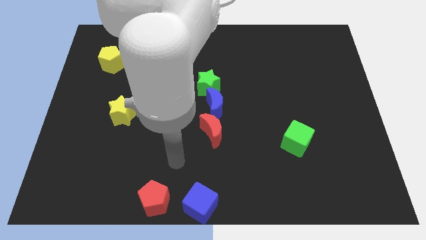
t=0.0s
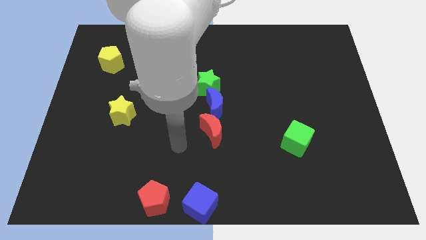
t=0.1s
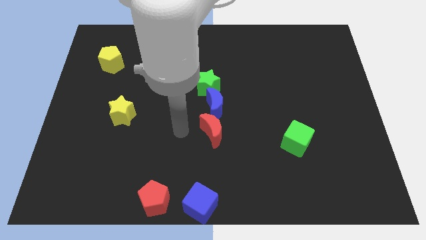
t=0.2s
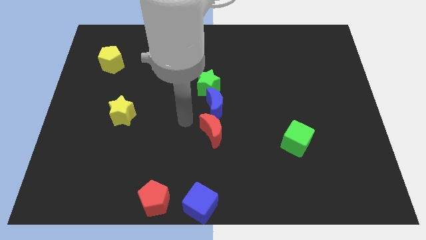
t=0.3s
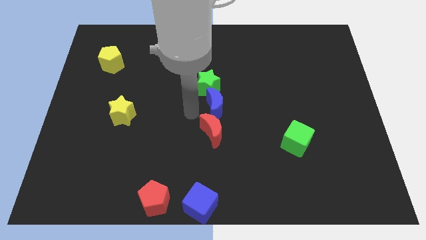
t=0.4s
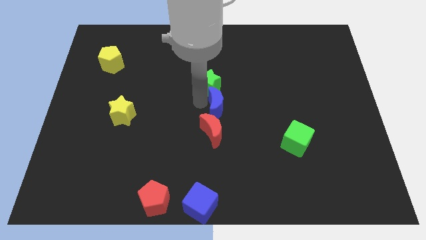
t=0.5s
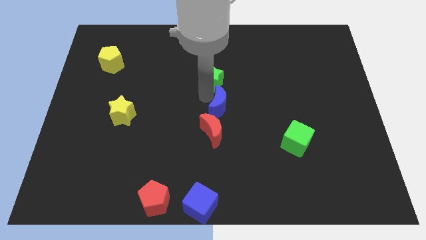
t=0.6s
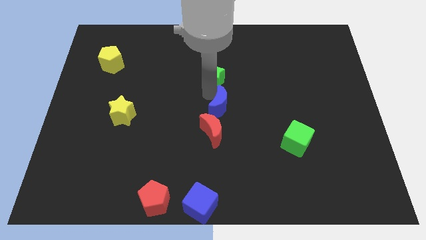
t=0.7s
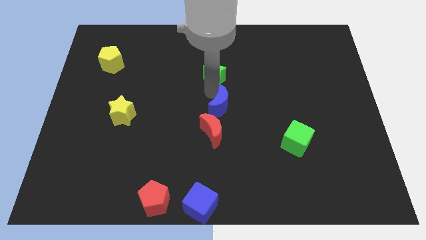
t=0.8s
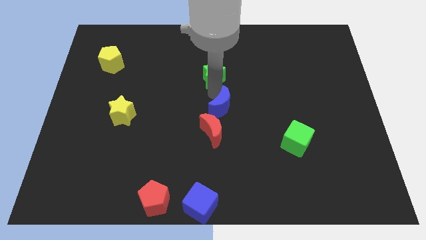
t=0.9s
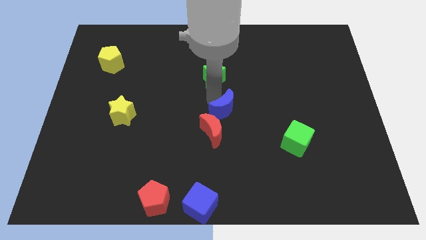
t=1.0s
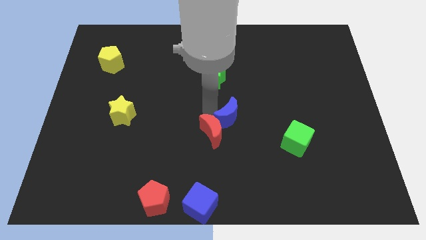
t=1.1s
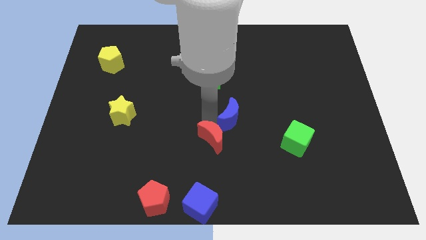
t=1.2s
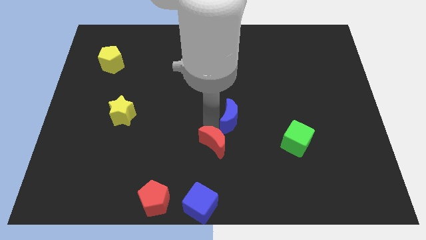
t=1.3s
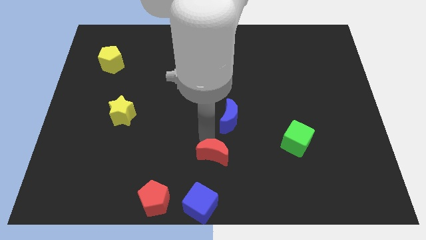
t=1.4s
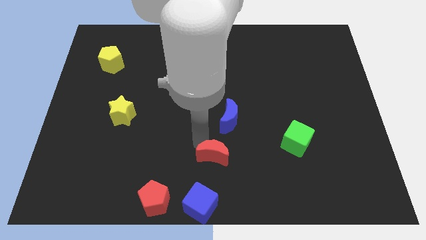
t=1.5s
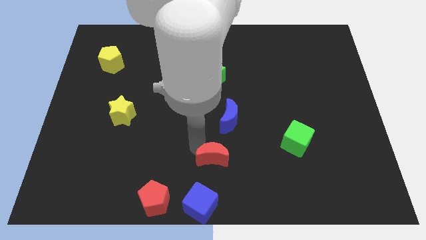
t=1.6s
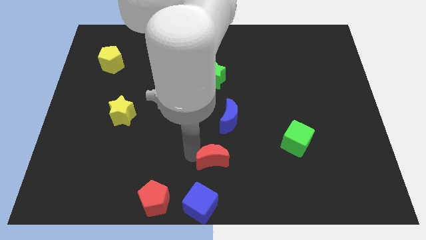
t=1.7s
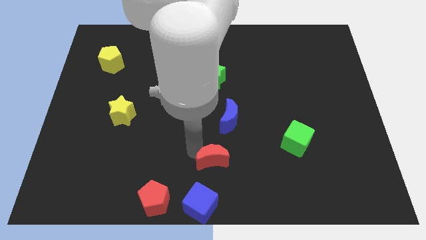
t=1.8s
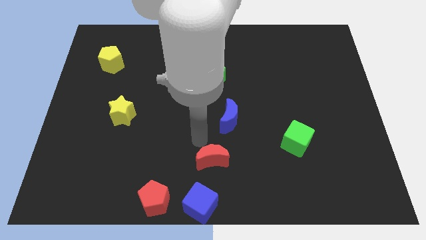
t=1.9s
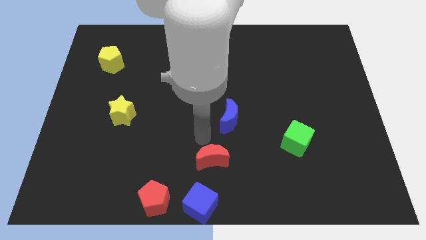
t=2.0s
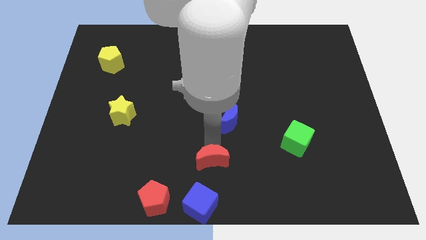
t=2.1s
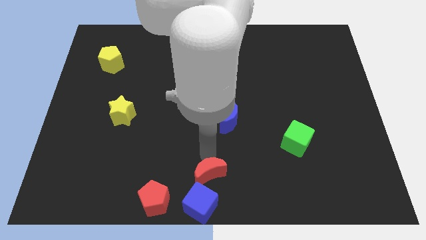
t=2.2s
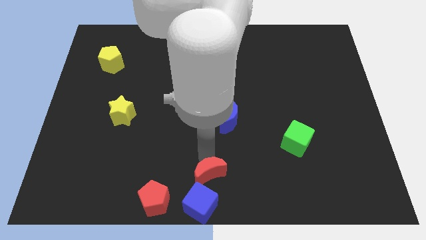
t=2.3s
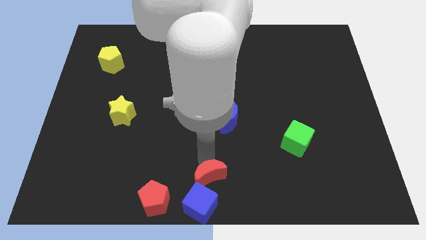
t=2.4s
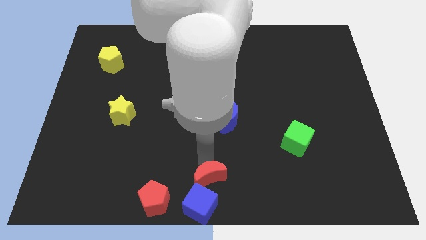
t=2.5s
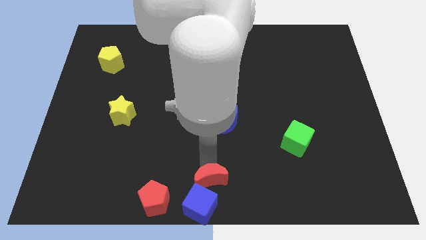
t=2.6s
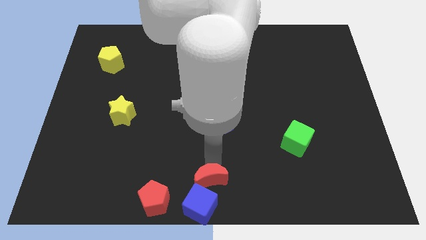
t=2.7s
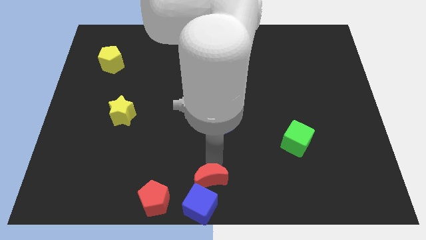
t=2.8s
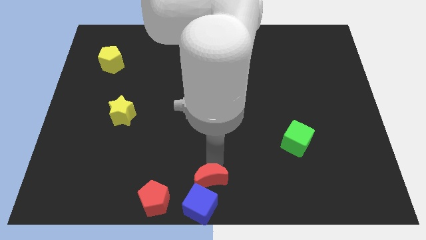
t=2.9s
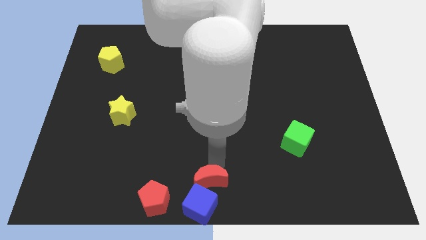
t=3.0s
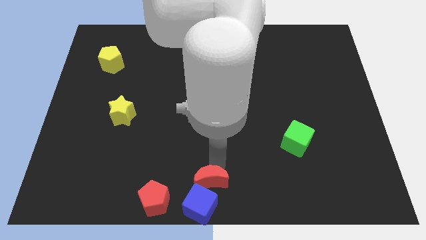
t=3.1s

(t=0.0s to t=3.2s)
move the red crescent into the blue cube

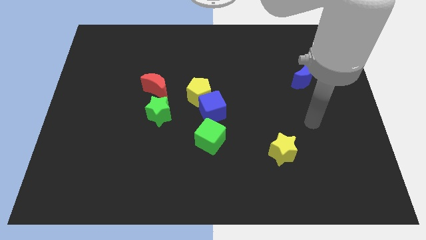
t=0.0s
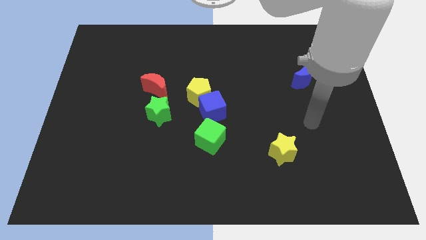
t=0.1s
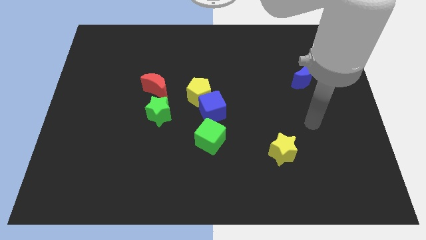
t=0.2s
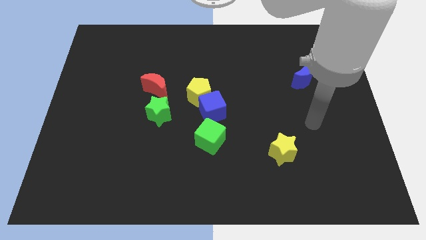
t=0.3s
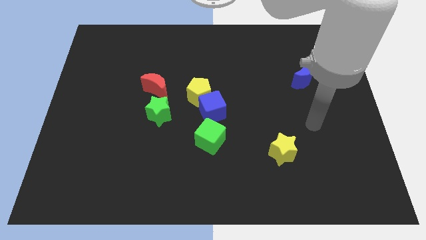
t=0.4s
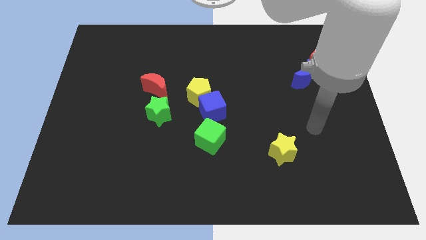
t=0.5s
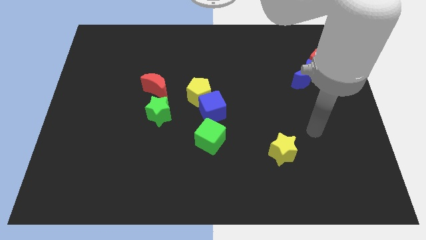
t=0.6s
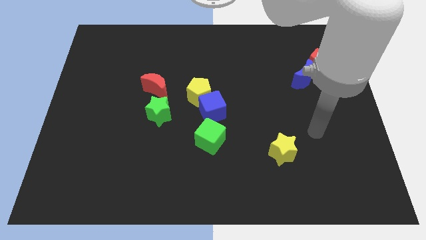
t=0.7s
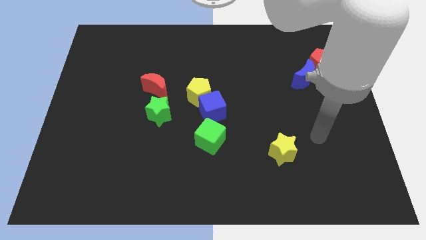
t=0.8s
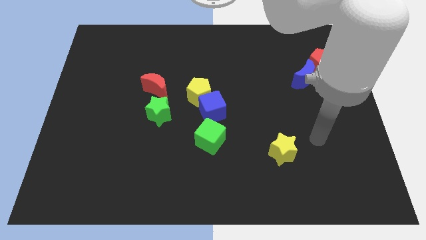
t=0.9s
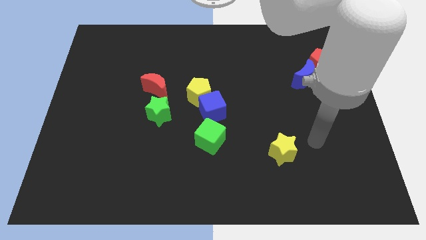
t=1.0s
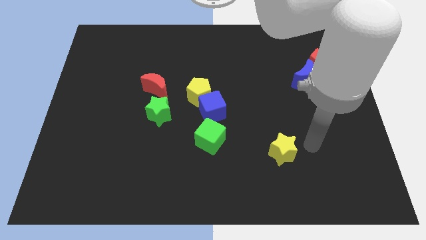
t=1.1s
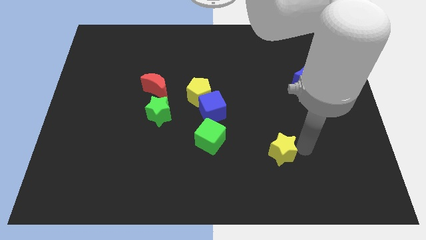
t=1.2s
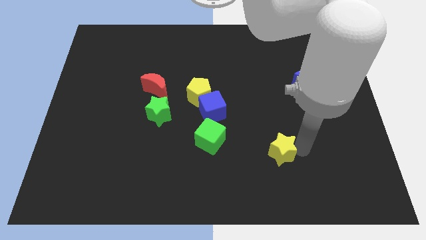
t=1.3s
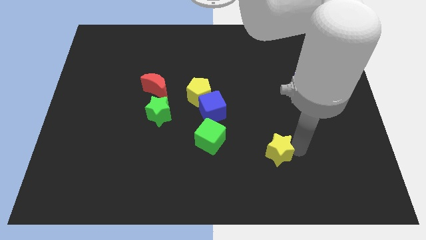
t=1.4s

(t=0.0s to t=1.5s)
move arm to the right side of the yellow star

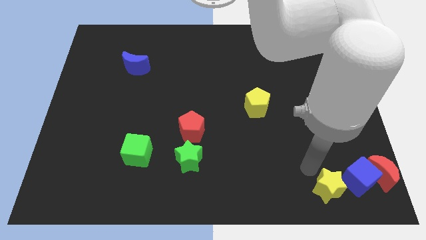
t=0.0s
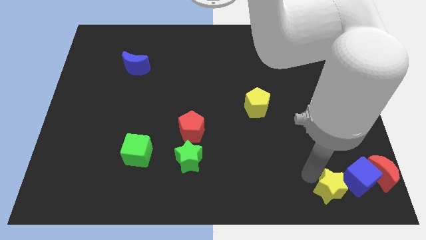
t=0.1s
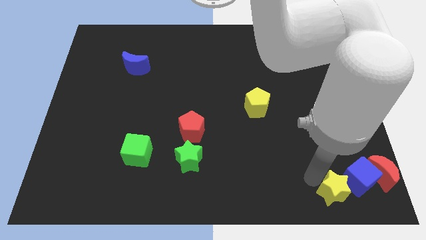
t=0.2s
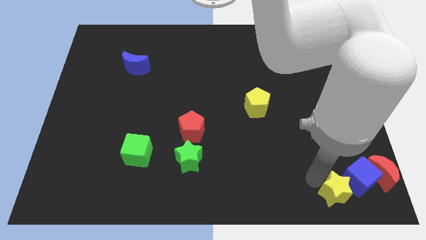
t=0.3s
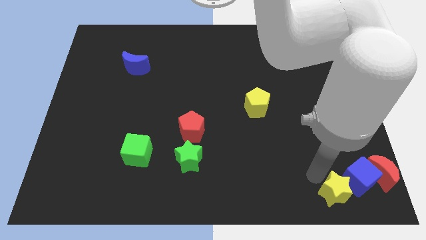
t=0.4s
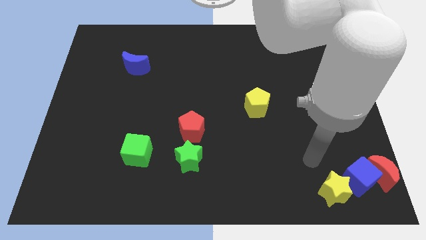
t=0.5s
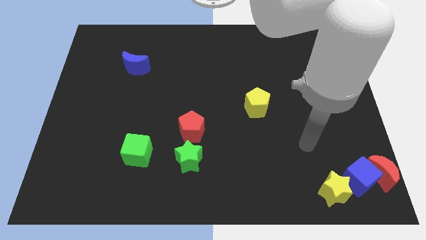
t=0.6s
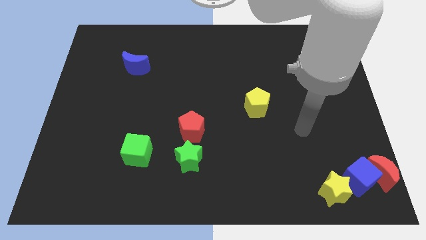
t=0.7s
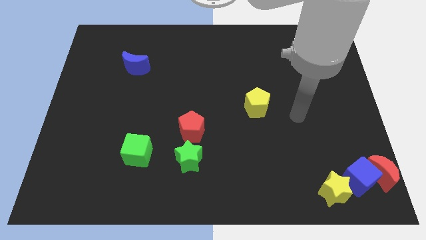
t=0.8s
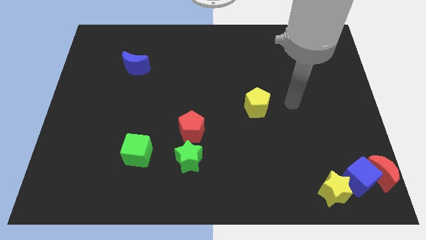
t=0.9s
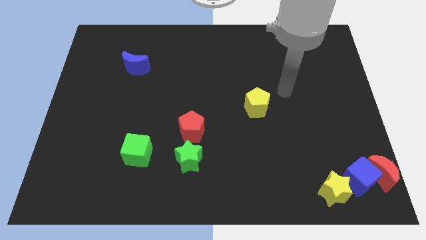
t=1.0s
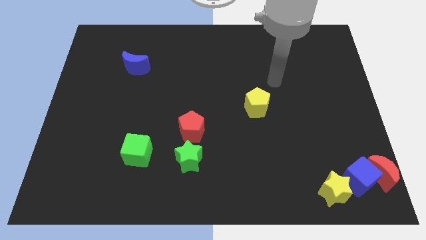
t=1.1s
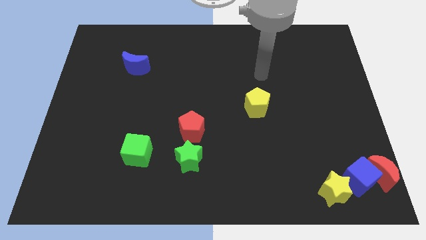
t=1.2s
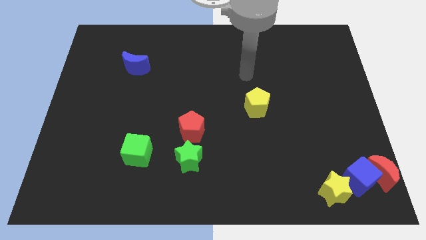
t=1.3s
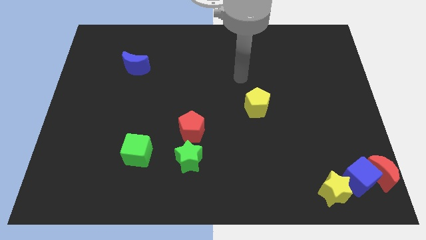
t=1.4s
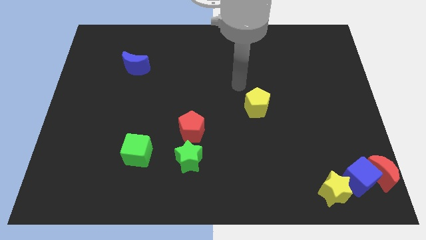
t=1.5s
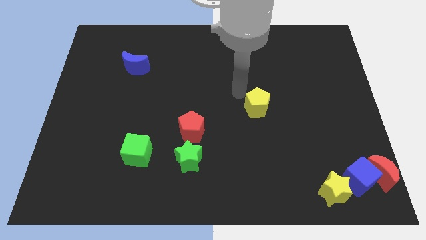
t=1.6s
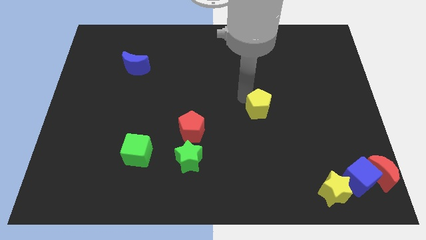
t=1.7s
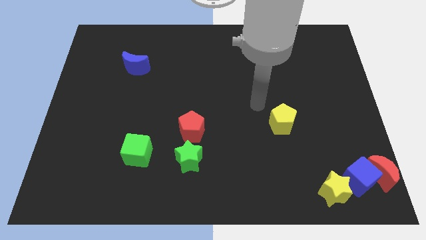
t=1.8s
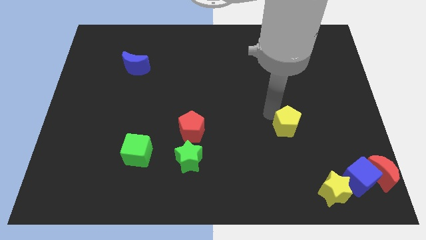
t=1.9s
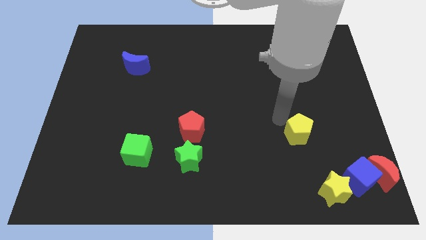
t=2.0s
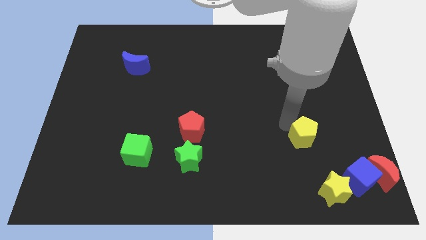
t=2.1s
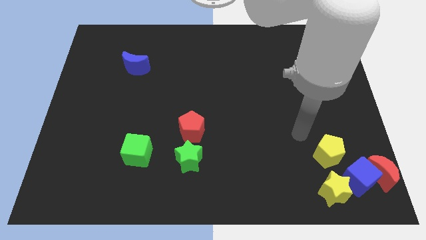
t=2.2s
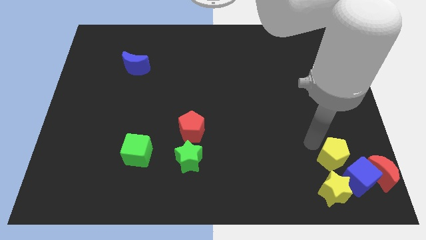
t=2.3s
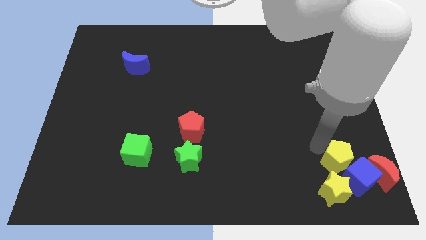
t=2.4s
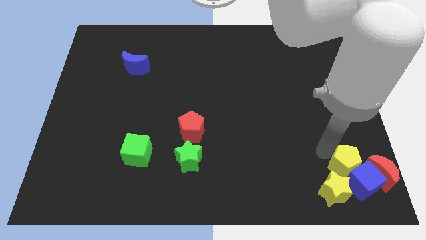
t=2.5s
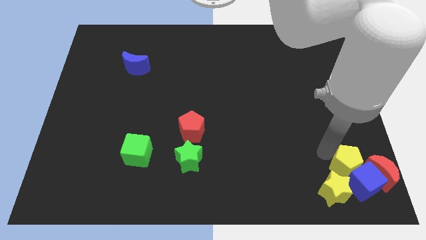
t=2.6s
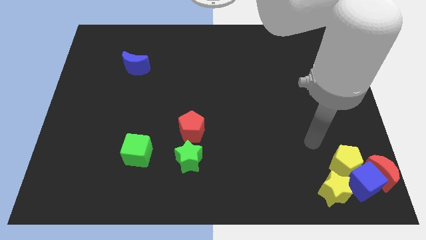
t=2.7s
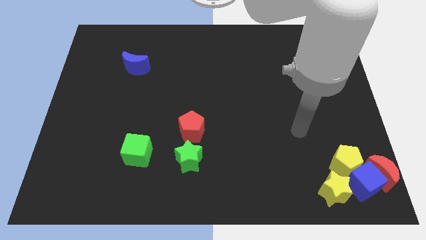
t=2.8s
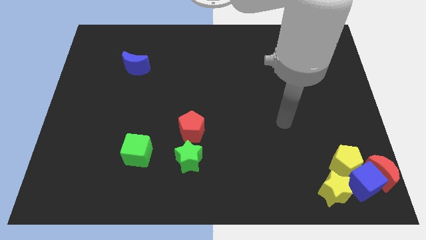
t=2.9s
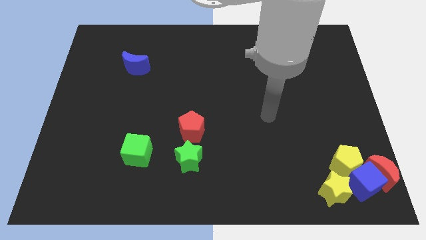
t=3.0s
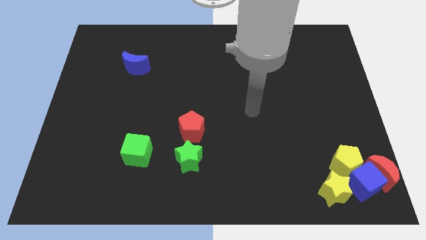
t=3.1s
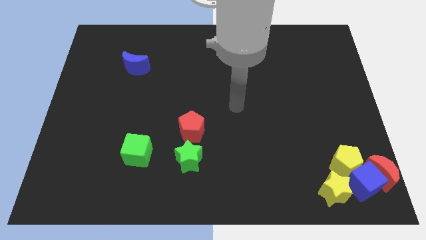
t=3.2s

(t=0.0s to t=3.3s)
push the yellow pentagon into the top of the blue cube

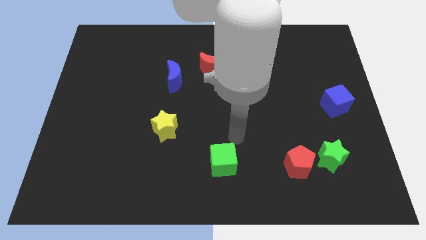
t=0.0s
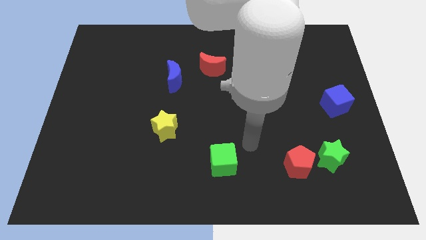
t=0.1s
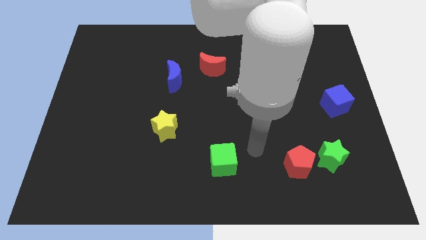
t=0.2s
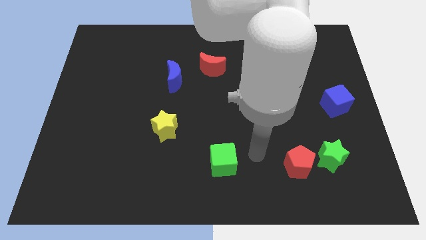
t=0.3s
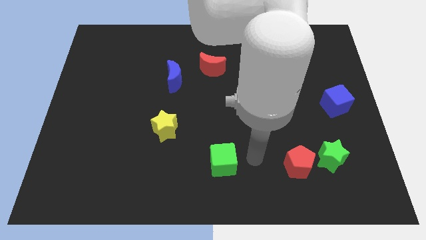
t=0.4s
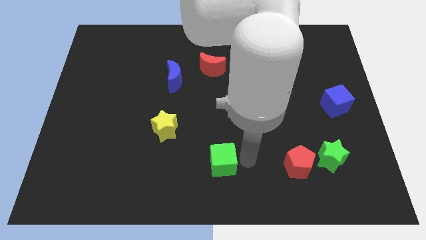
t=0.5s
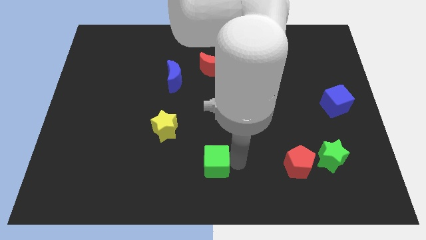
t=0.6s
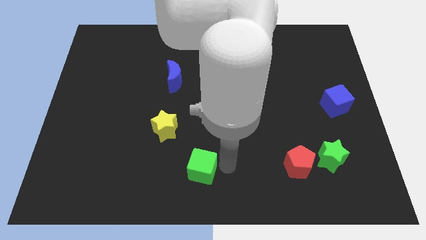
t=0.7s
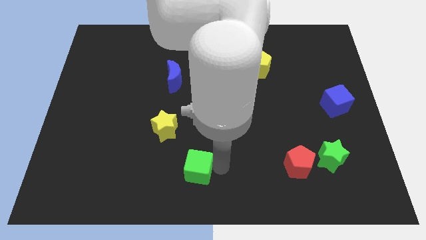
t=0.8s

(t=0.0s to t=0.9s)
push the green cube slightly to the left
